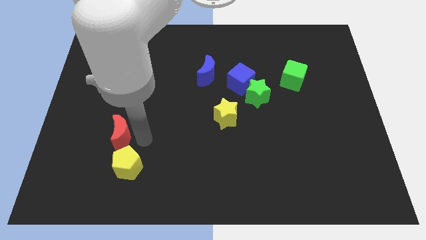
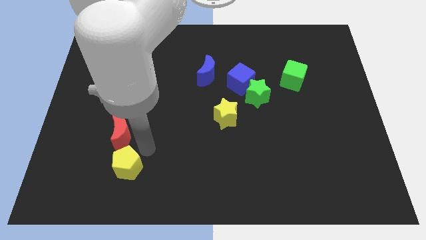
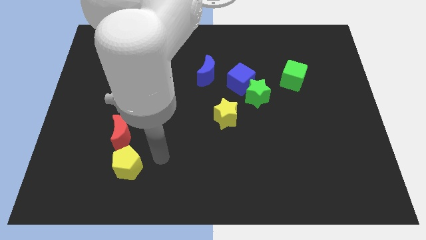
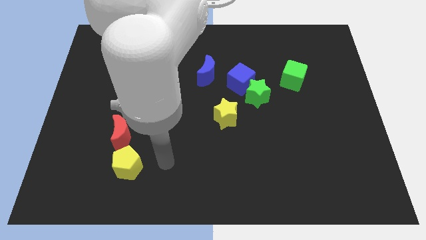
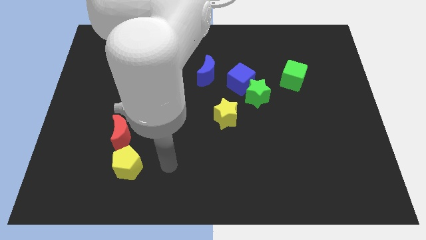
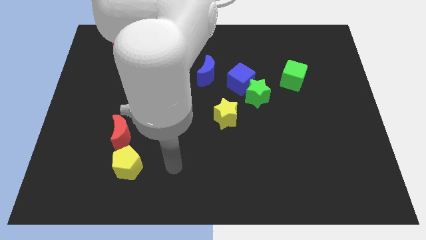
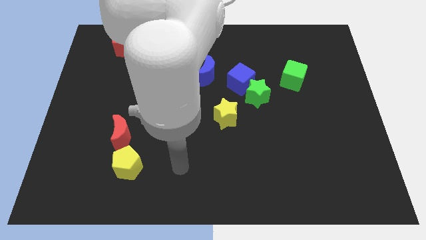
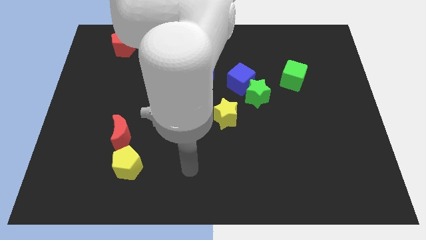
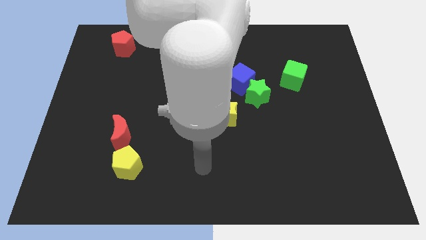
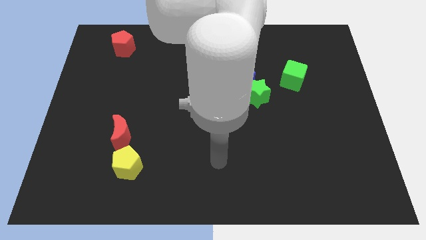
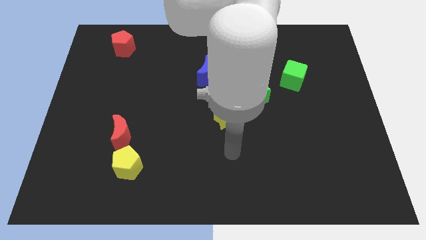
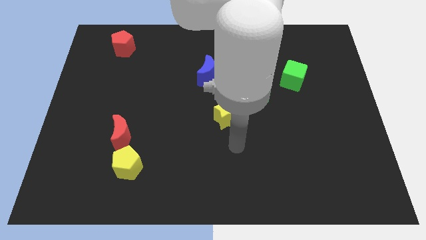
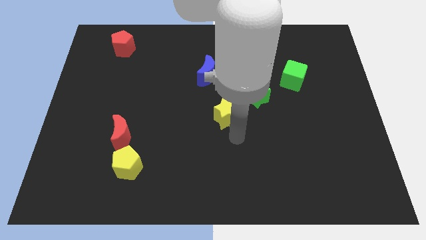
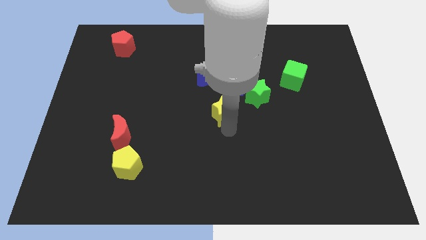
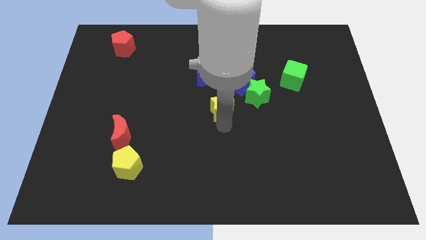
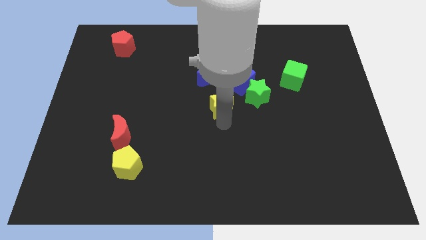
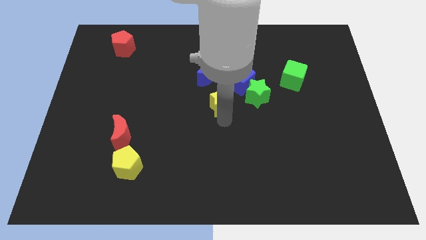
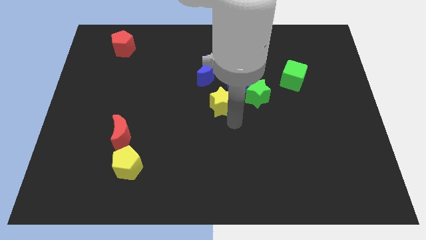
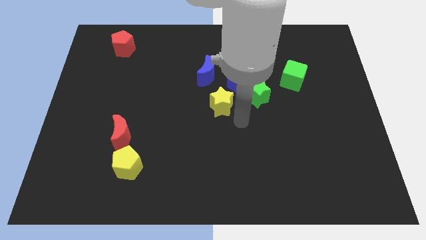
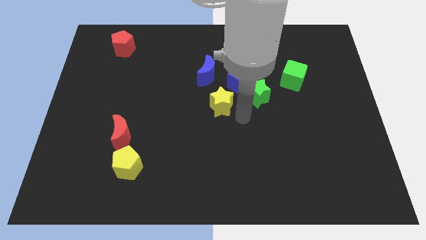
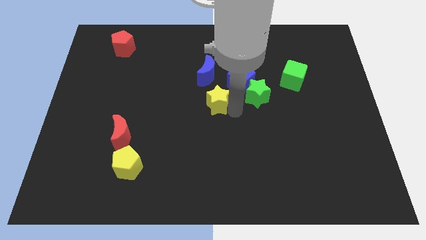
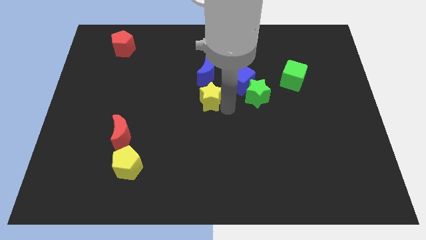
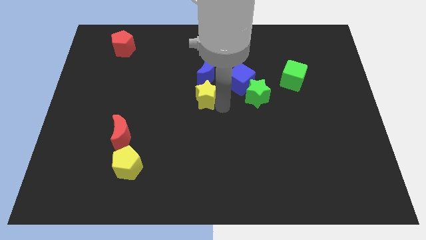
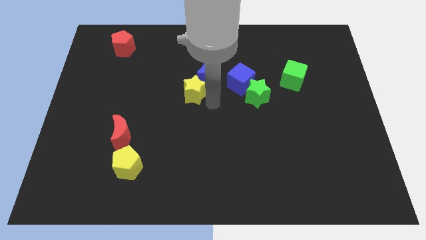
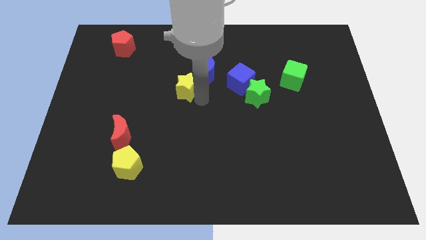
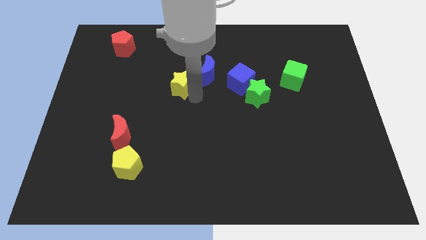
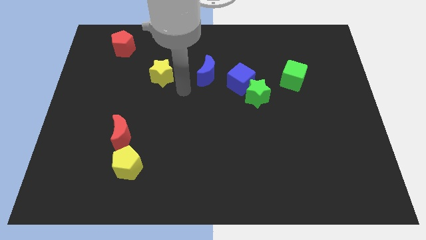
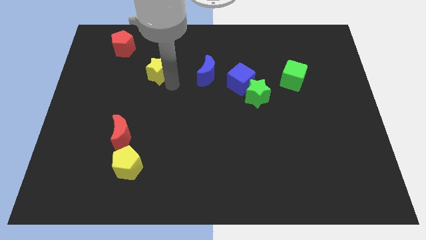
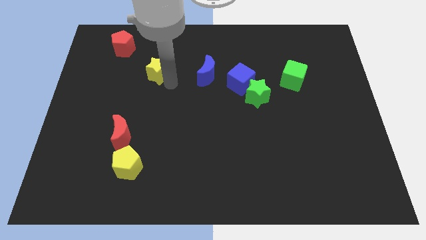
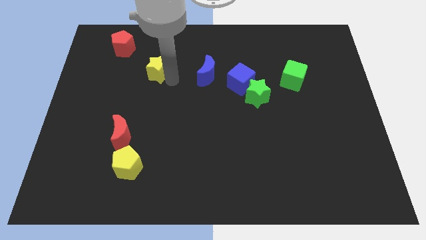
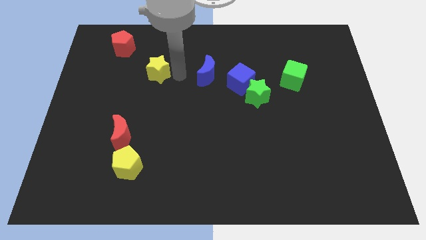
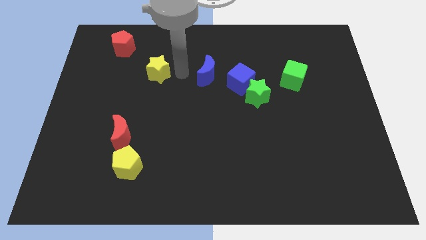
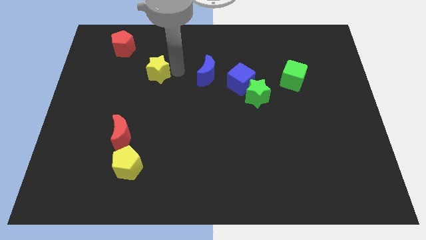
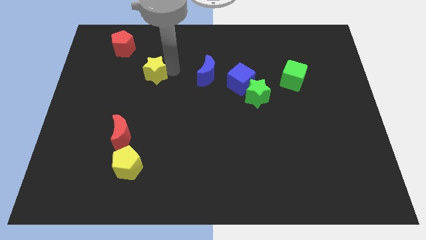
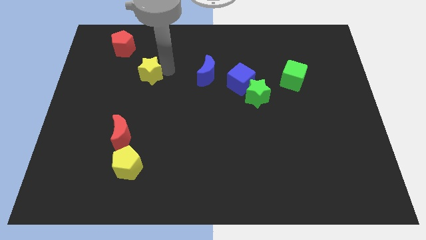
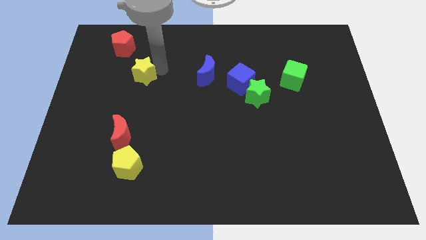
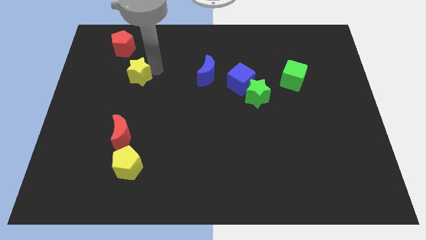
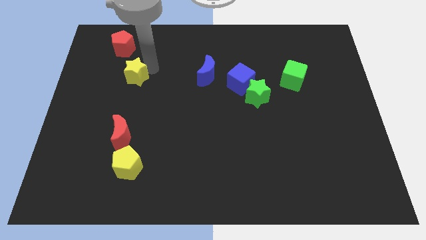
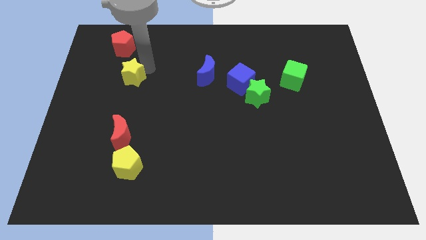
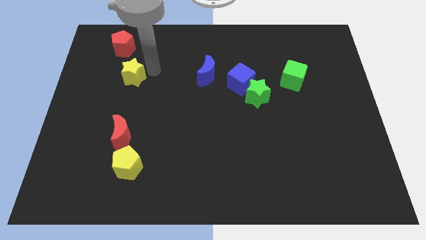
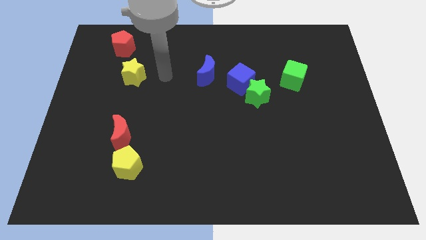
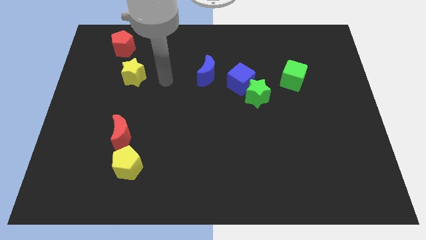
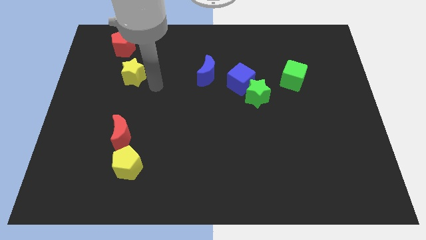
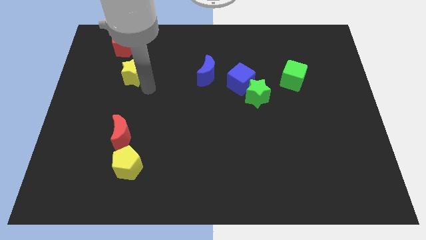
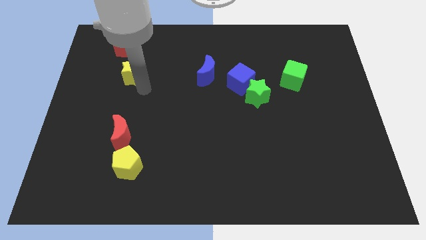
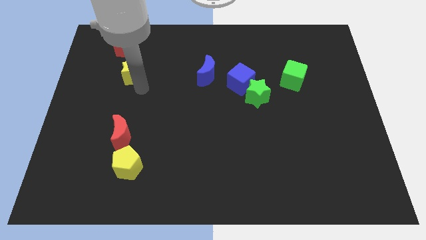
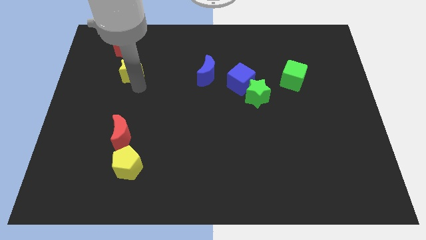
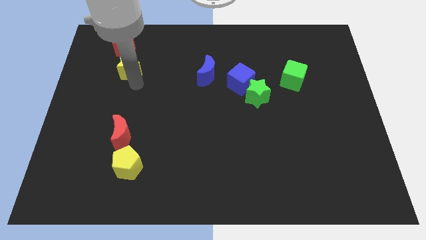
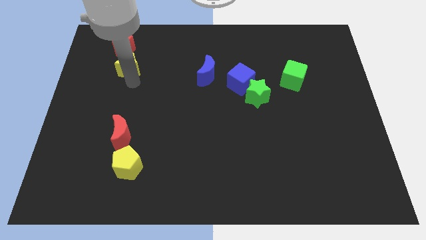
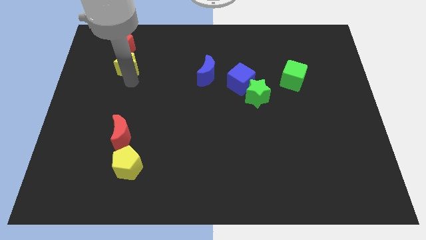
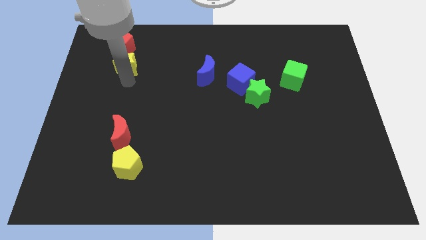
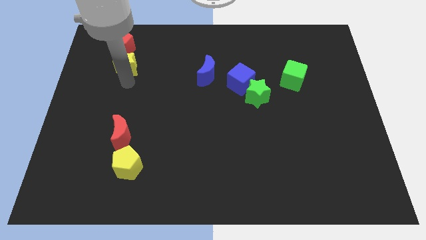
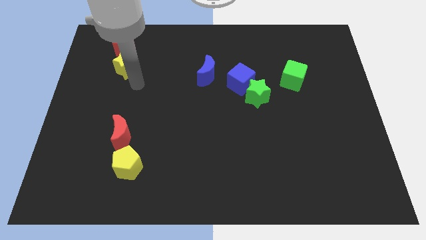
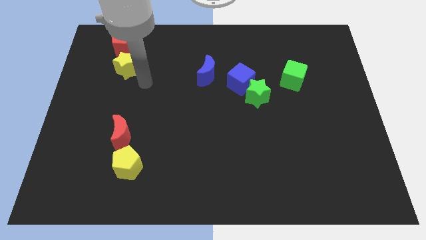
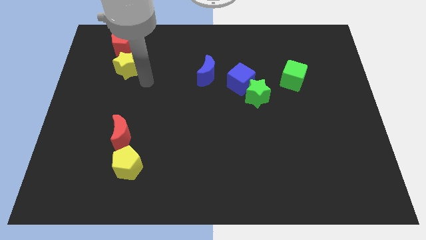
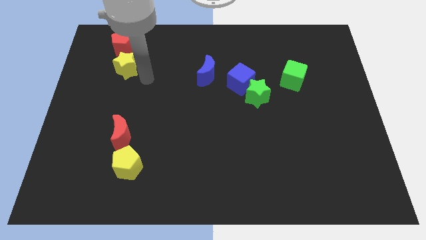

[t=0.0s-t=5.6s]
move the yellow star below the red pentagon

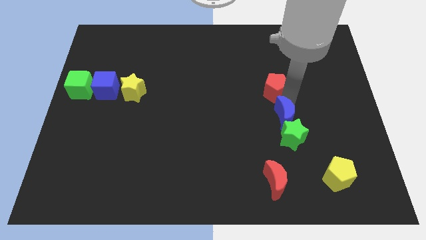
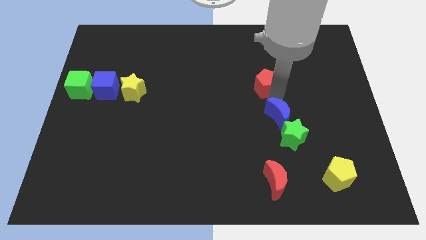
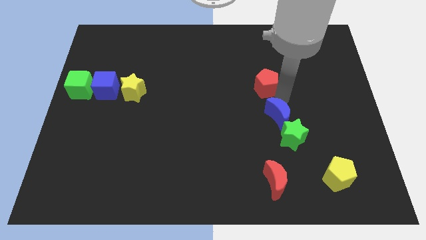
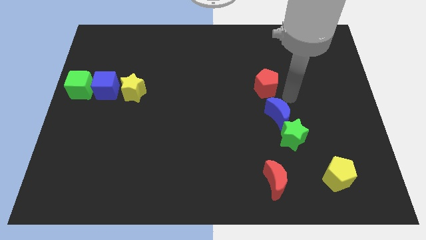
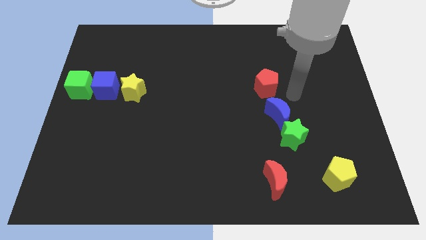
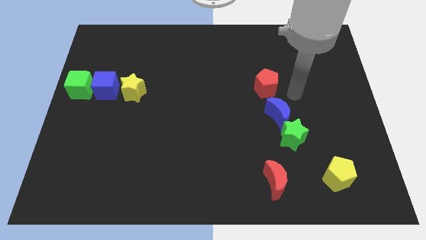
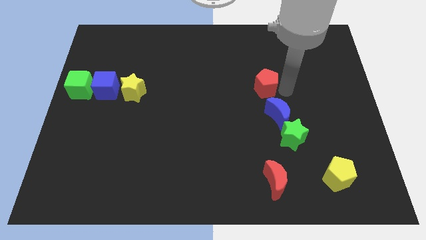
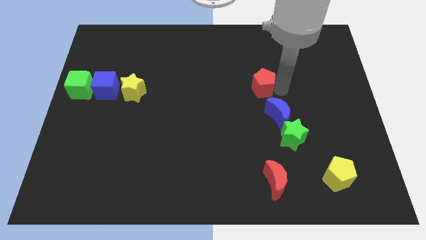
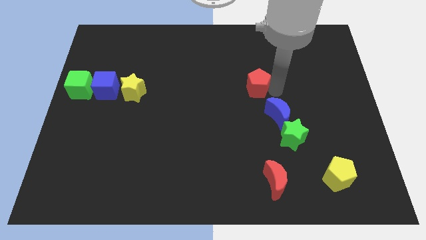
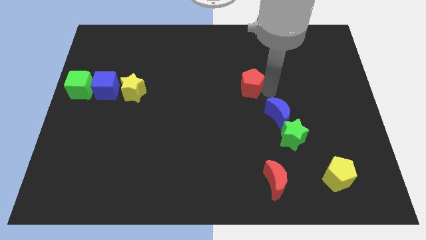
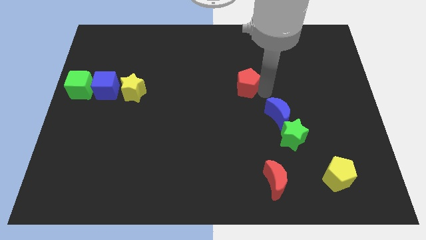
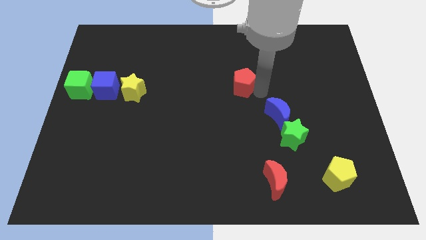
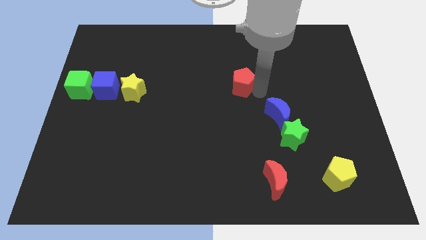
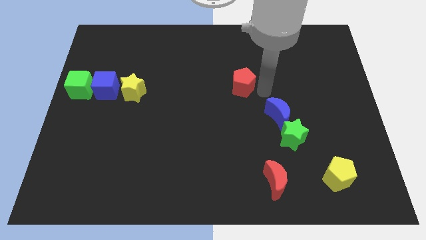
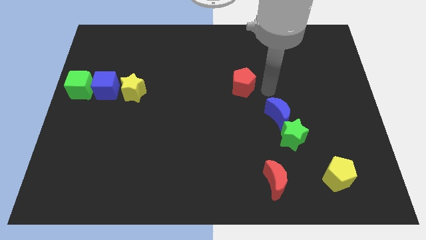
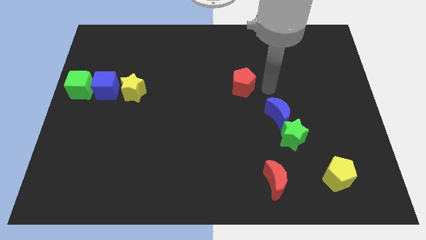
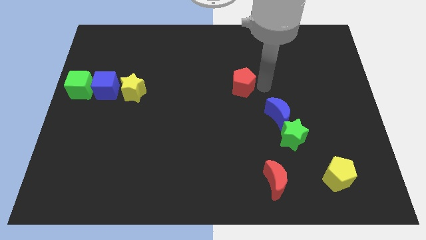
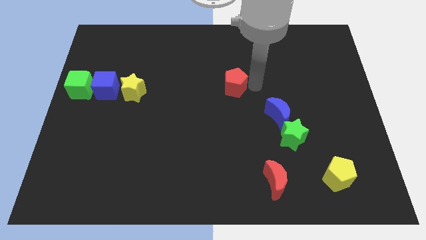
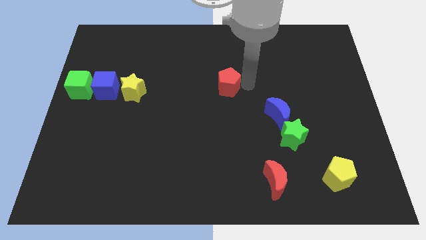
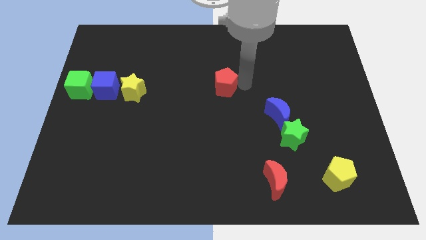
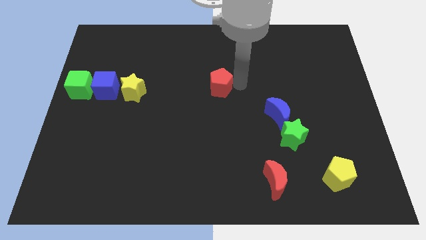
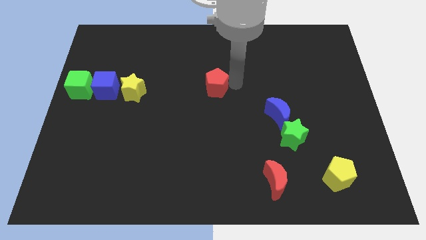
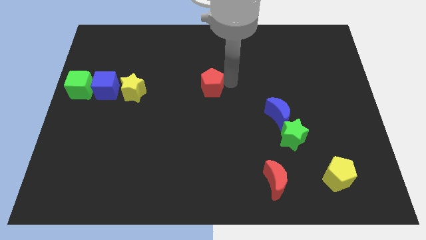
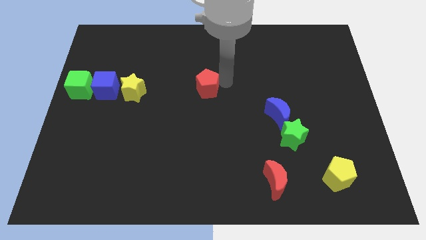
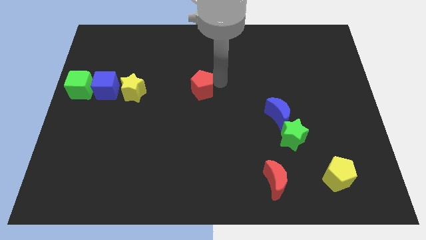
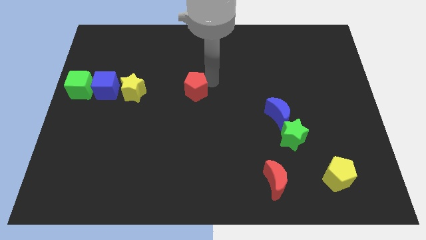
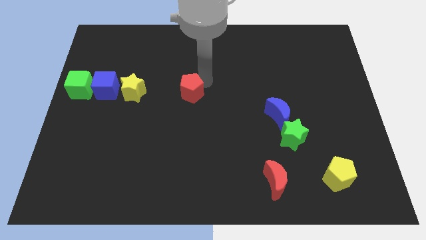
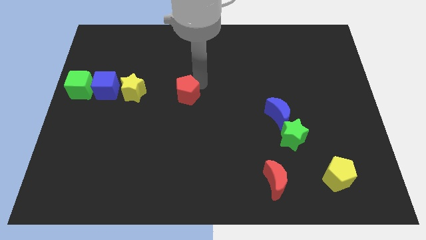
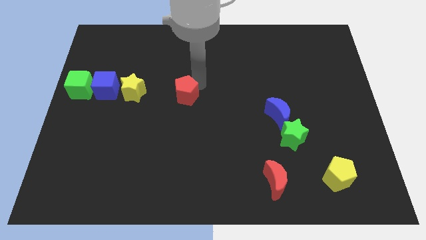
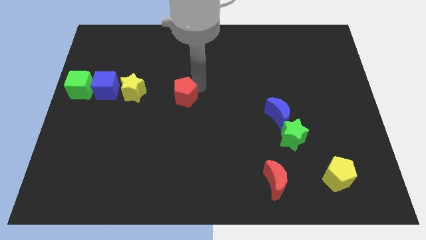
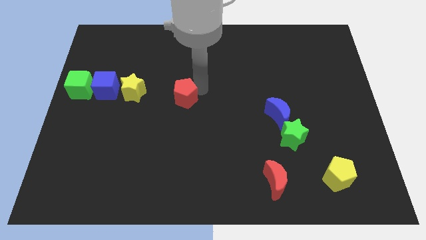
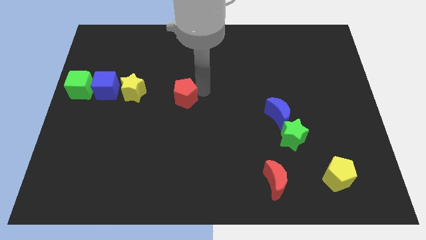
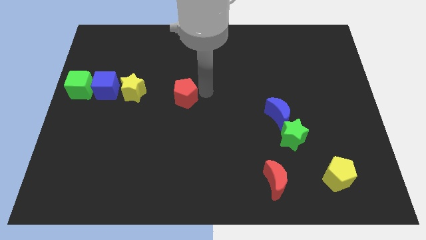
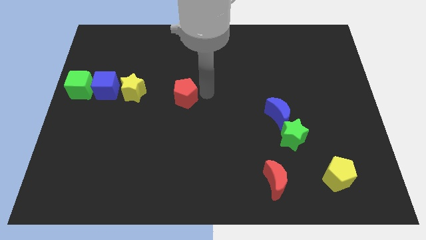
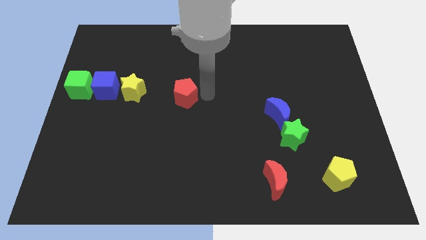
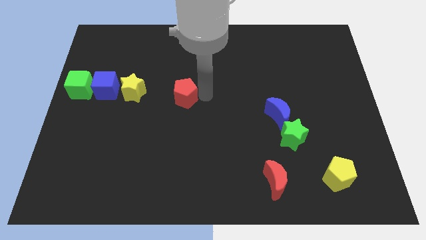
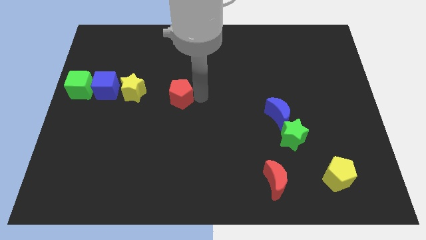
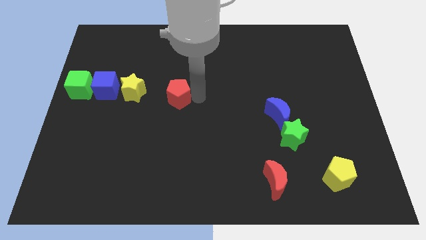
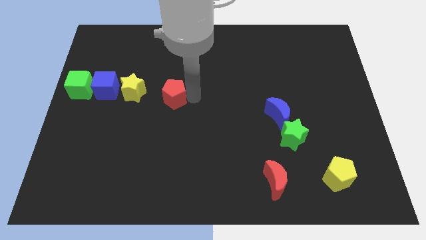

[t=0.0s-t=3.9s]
separate red pentagon from the blue moon
